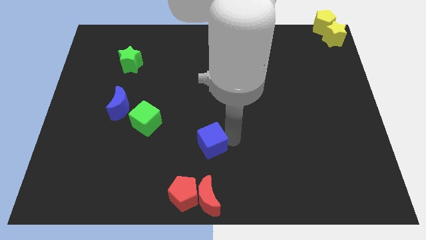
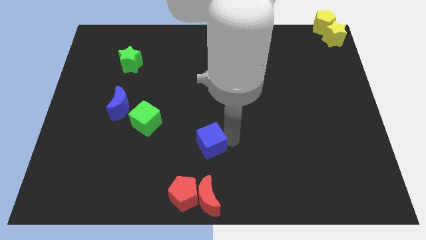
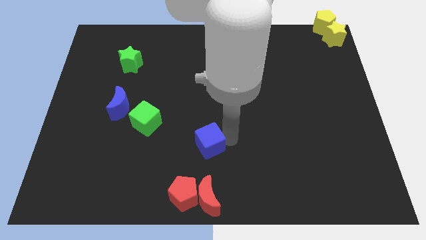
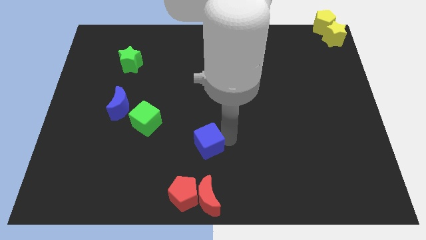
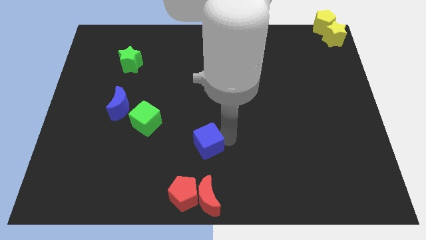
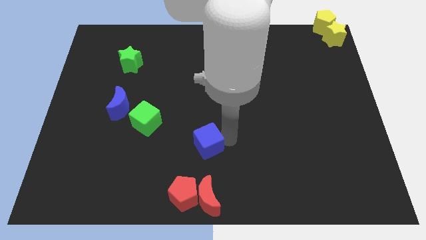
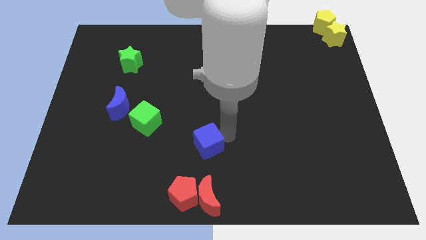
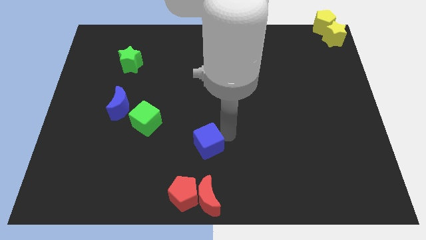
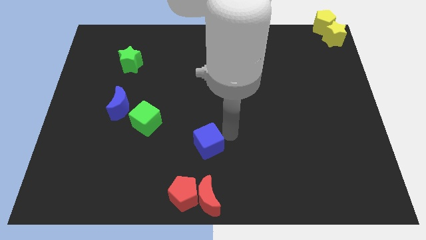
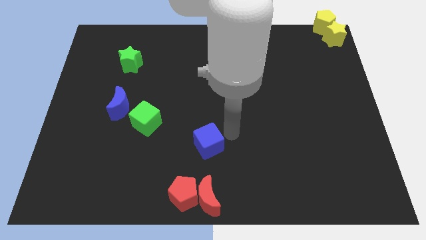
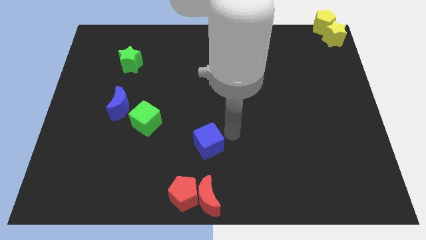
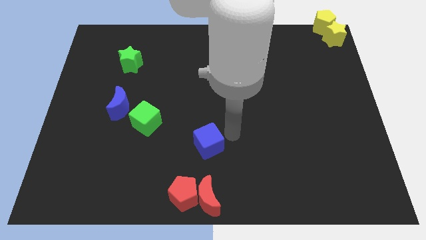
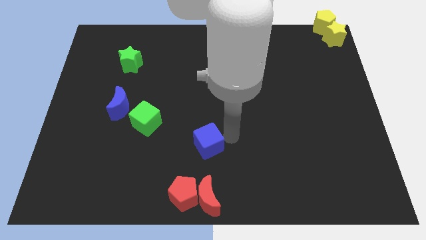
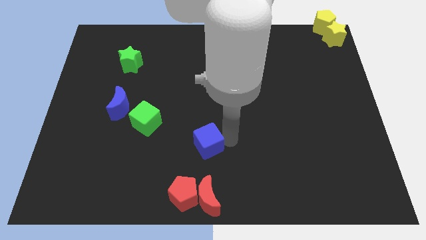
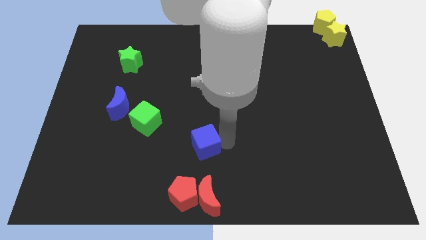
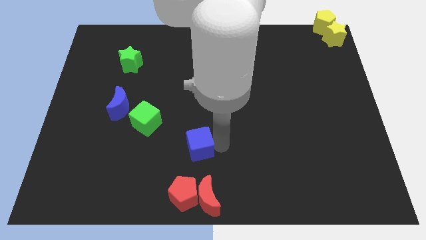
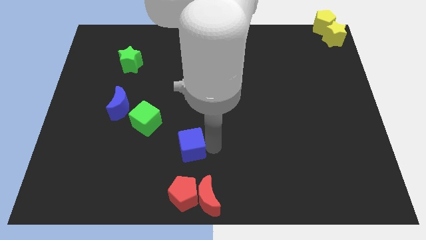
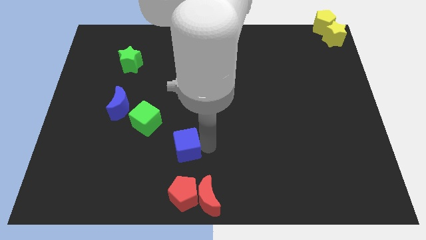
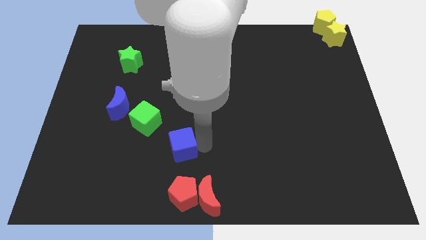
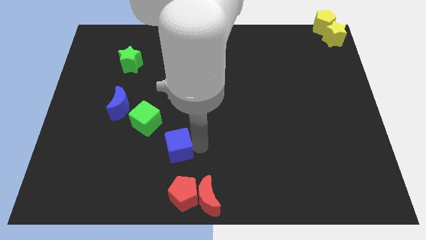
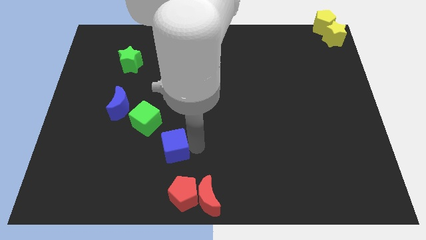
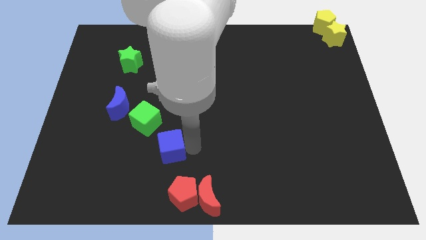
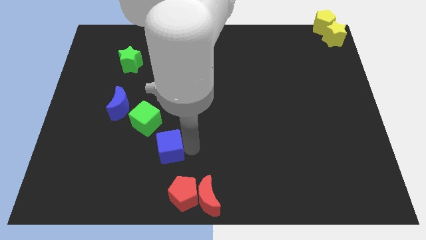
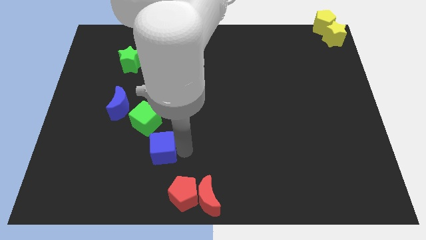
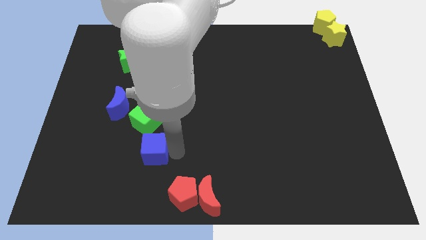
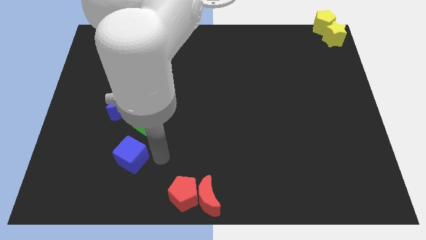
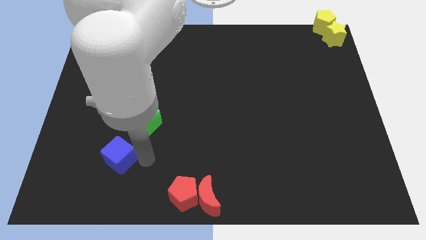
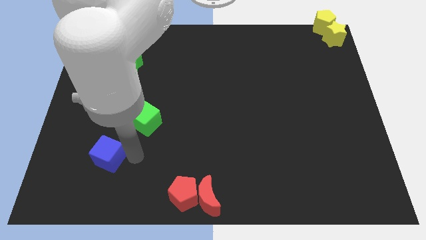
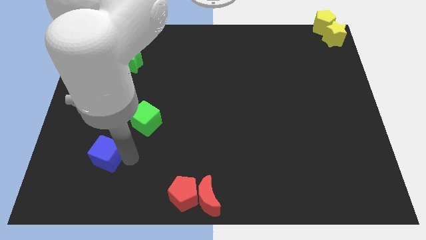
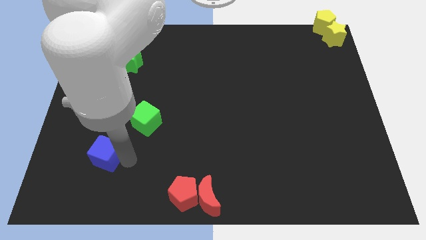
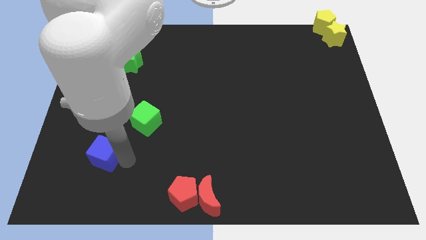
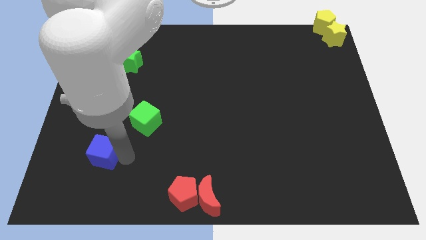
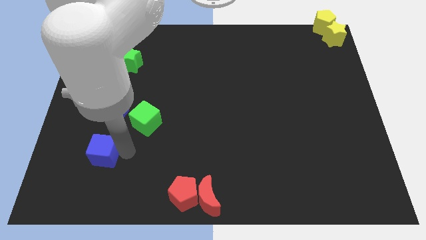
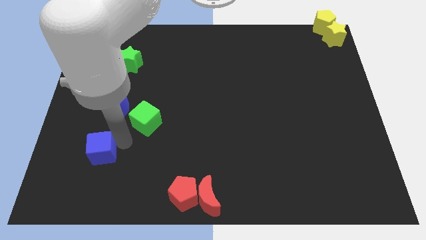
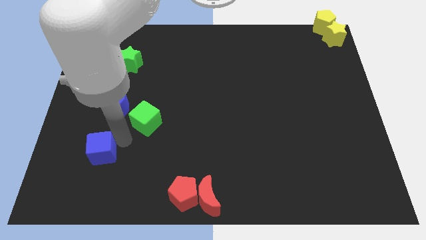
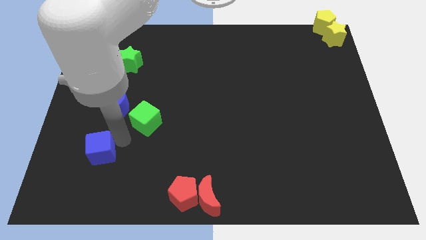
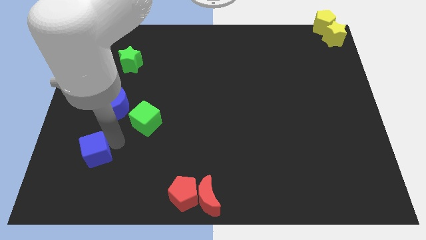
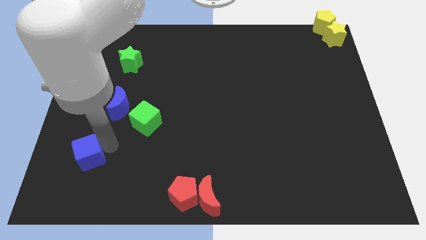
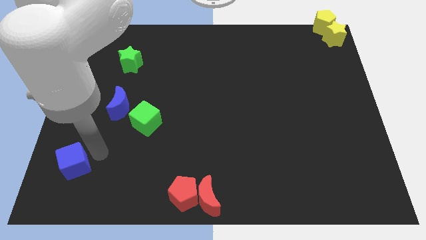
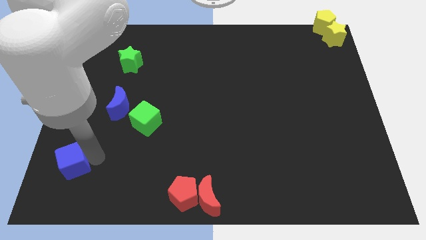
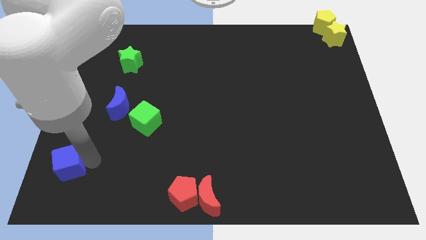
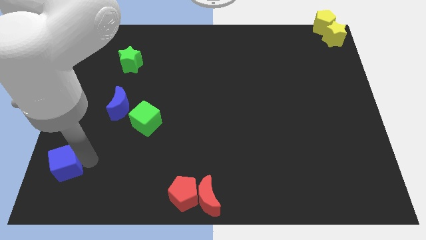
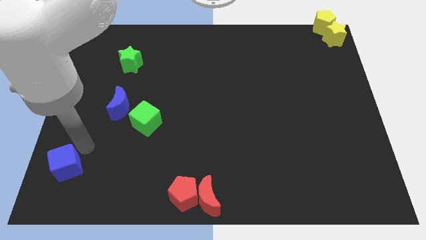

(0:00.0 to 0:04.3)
bring the blue cube at the bottom left side of the board

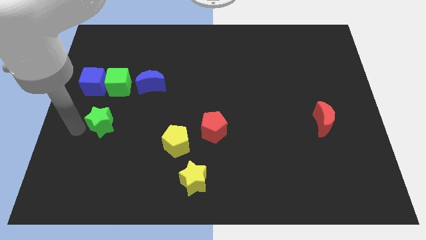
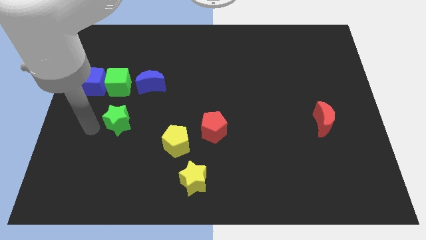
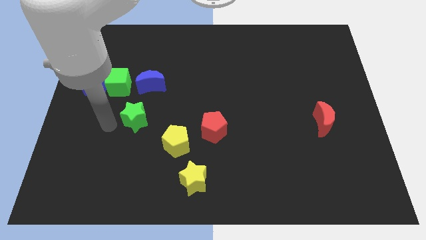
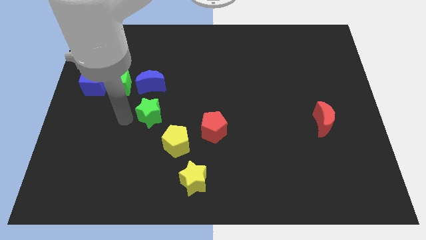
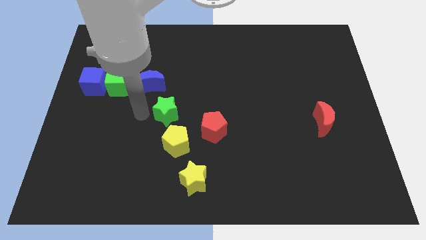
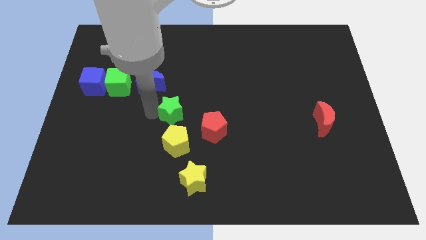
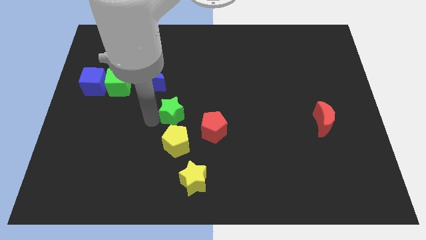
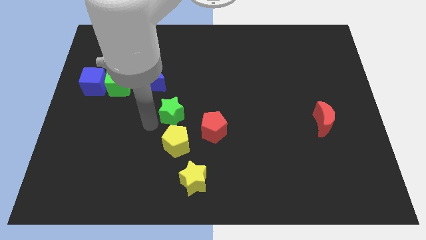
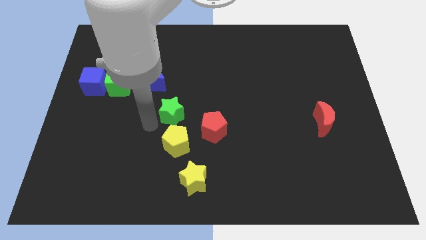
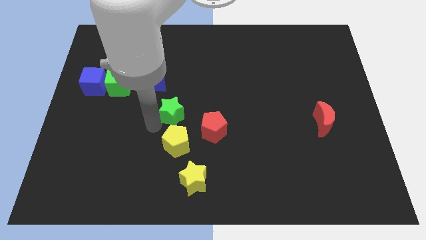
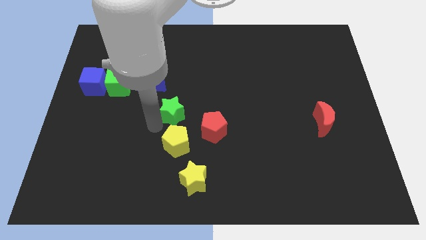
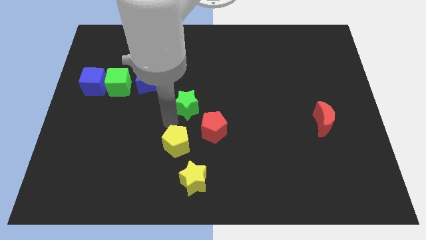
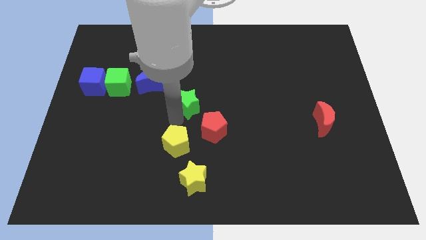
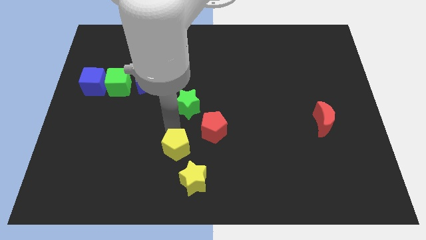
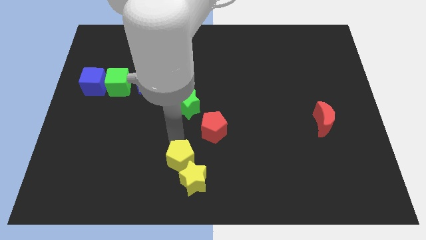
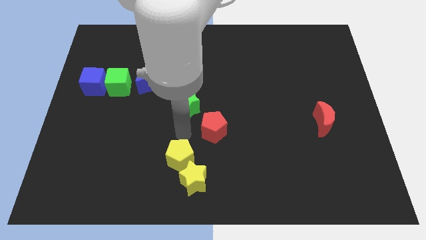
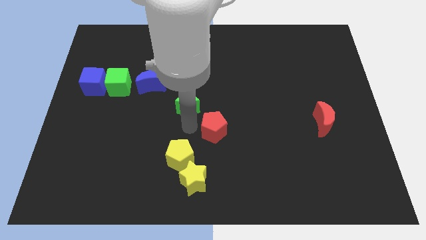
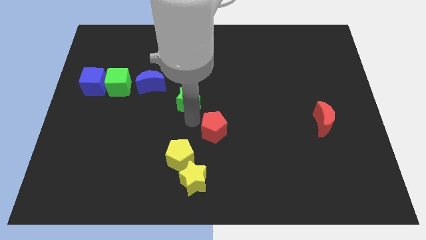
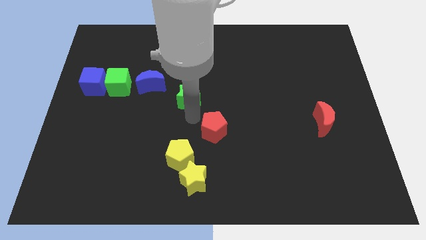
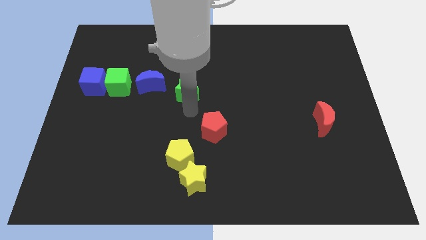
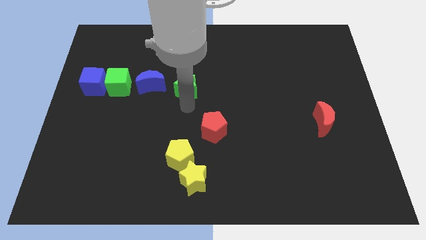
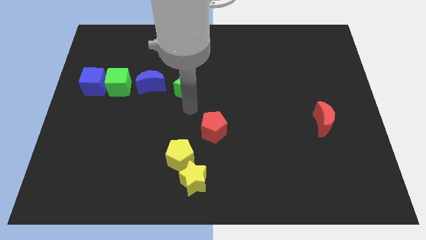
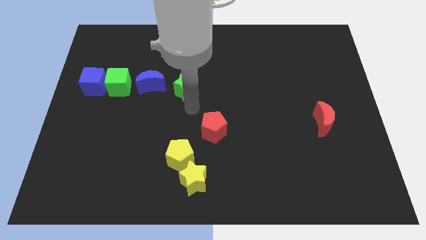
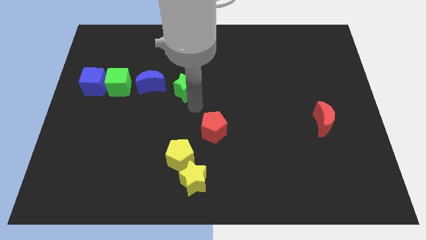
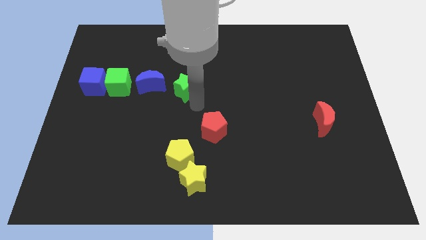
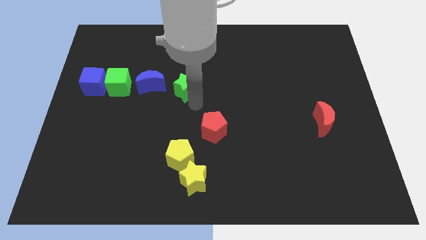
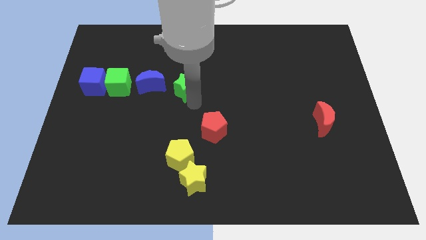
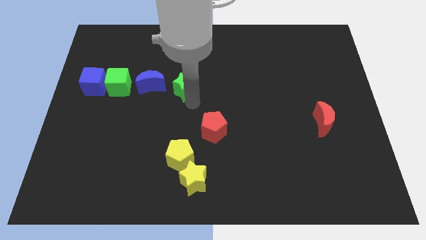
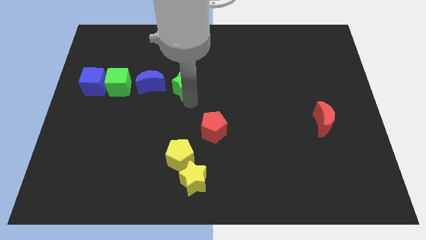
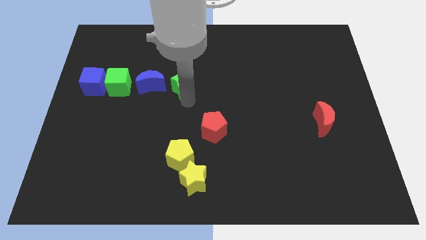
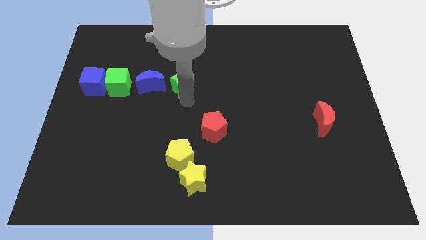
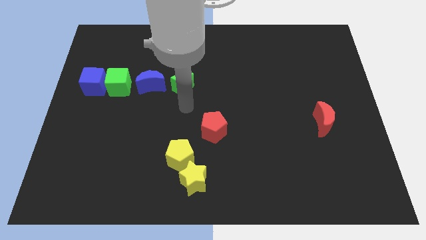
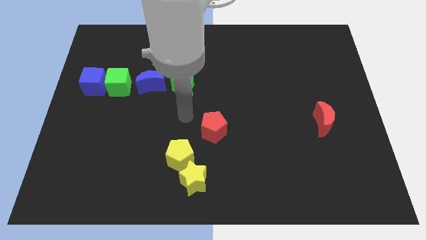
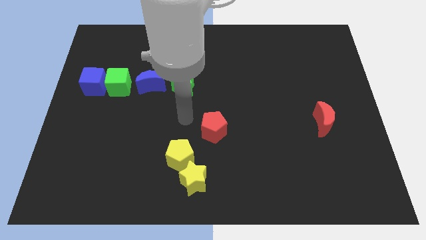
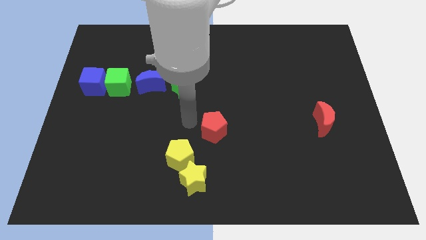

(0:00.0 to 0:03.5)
push the green star horizontally to the right of the blue crescent

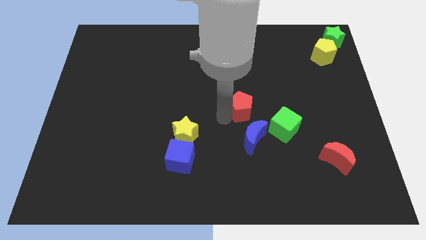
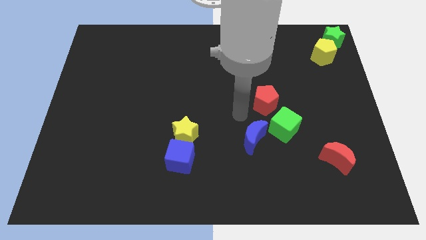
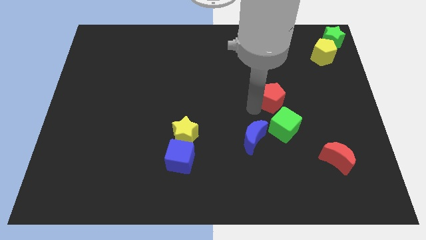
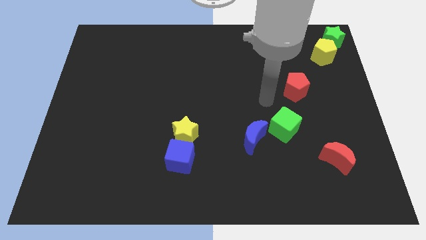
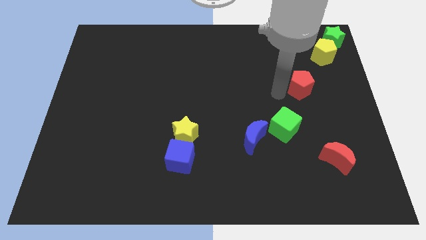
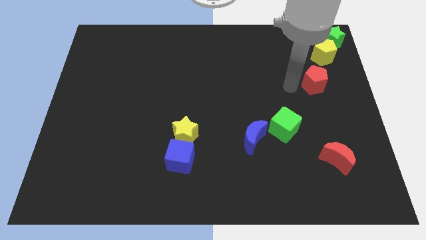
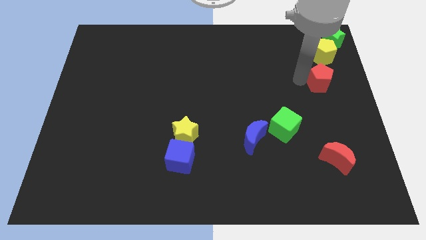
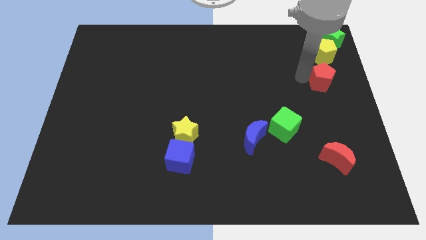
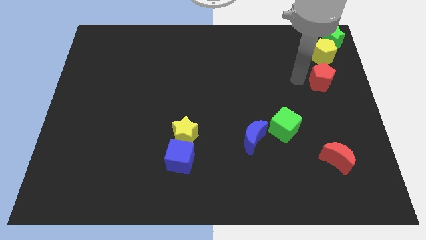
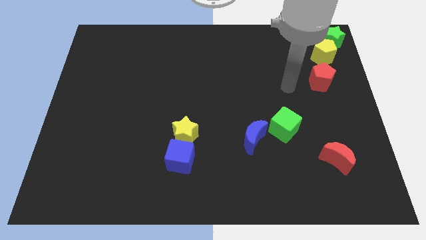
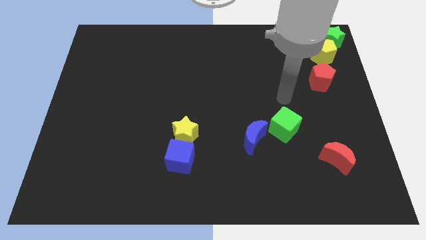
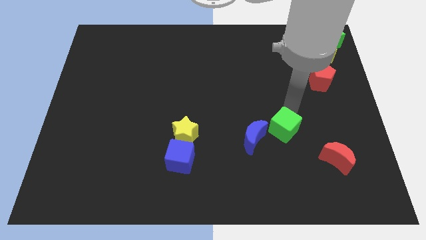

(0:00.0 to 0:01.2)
move the red pentagon close to the yellow pentagon
